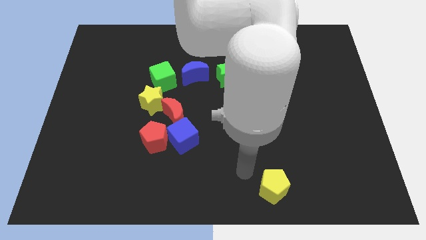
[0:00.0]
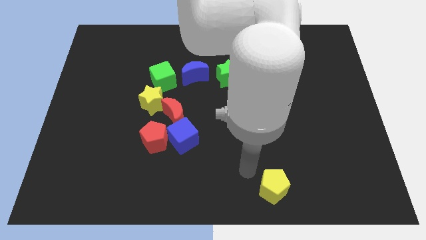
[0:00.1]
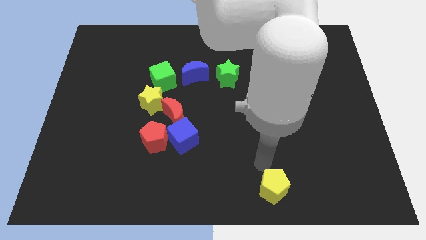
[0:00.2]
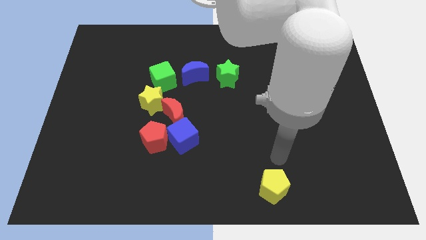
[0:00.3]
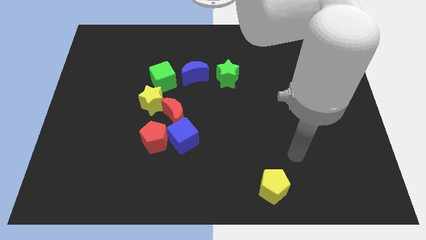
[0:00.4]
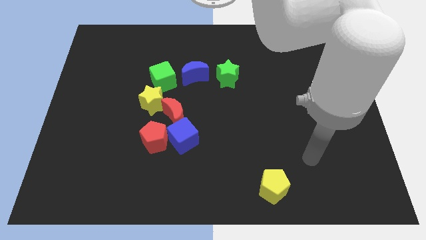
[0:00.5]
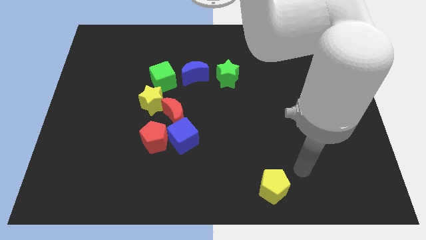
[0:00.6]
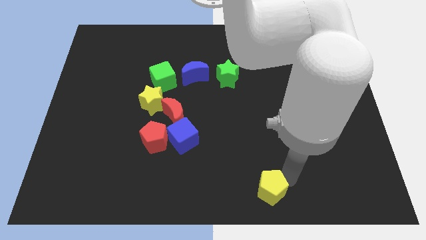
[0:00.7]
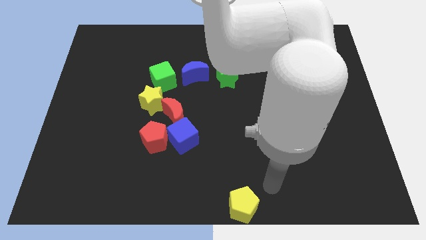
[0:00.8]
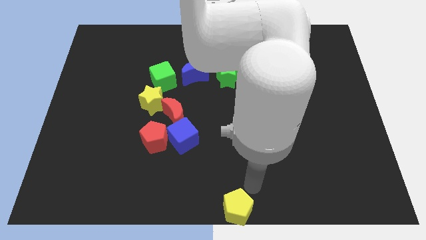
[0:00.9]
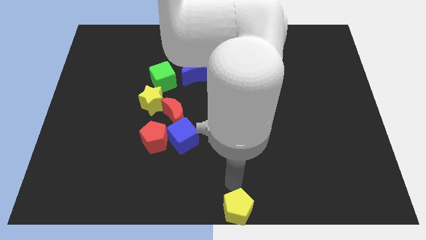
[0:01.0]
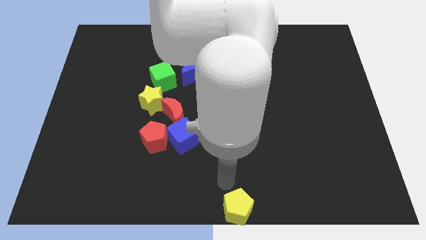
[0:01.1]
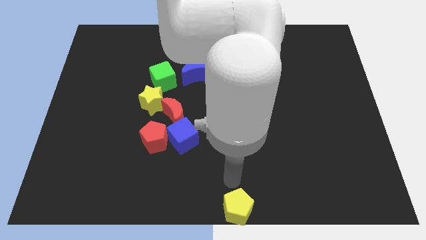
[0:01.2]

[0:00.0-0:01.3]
move the yellow pentagon to the bottom center of the board

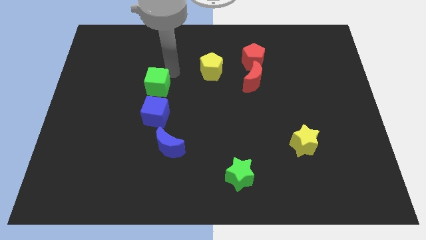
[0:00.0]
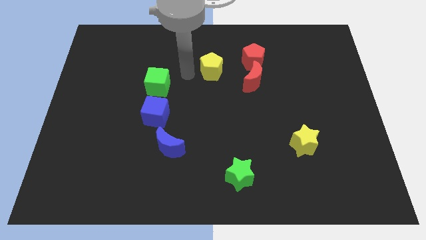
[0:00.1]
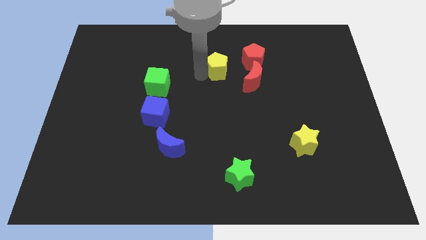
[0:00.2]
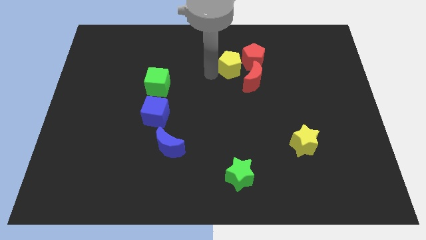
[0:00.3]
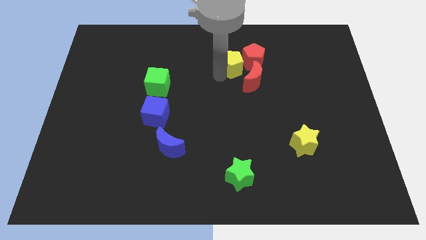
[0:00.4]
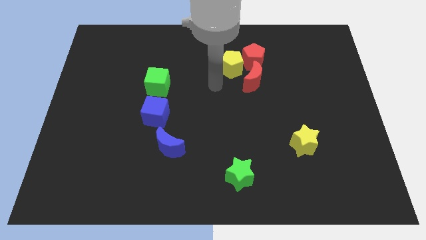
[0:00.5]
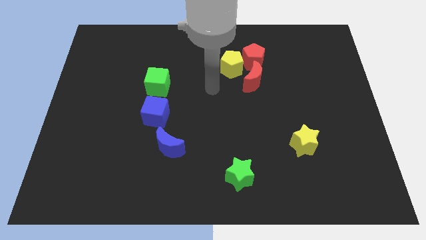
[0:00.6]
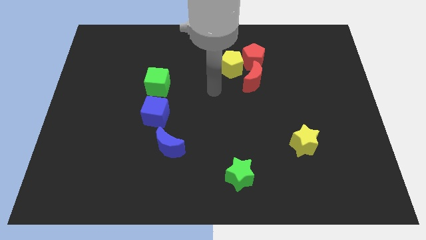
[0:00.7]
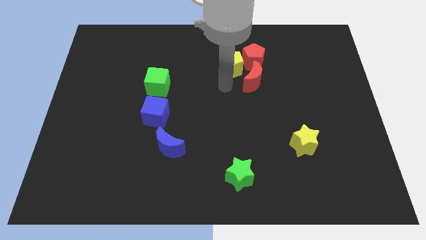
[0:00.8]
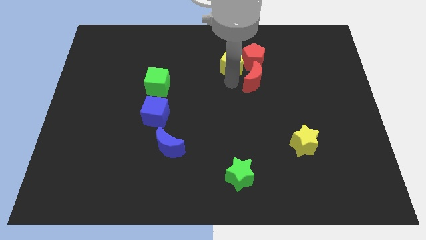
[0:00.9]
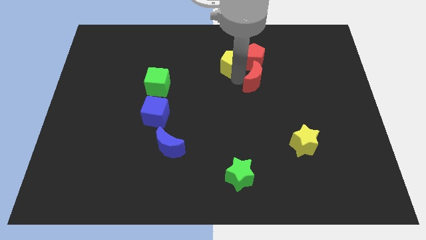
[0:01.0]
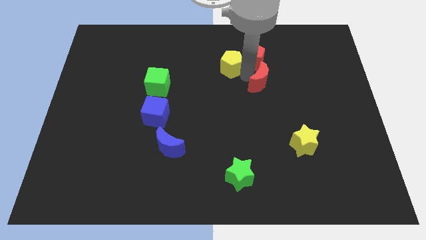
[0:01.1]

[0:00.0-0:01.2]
move the yellow pentagon close to the red pentagon

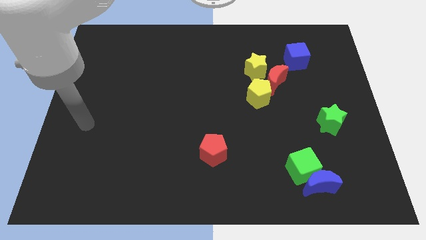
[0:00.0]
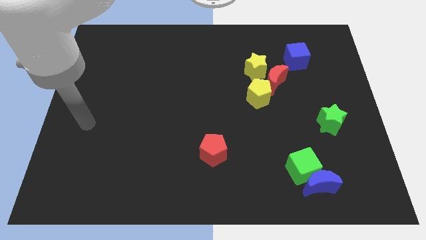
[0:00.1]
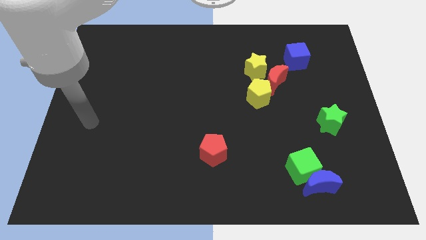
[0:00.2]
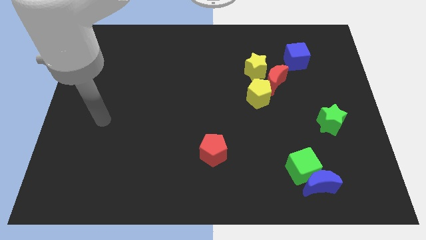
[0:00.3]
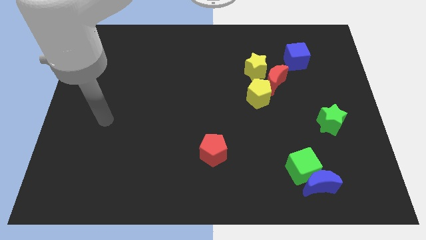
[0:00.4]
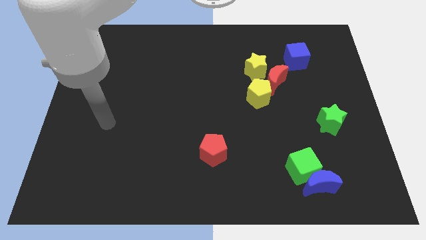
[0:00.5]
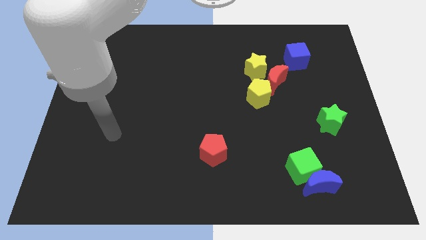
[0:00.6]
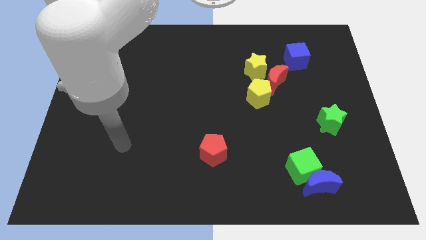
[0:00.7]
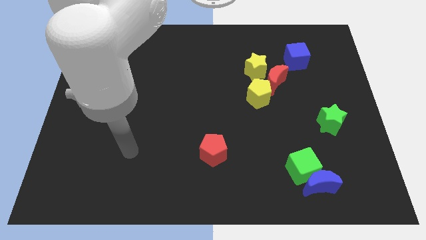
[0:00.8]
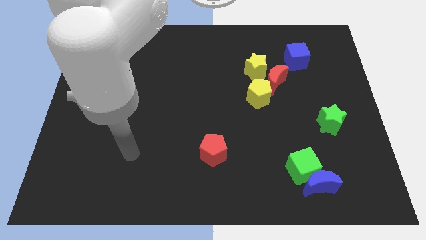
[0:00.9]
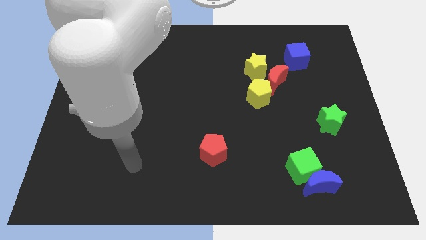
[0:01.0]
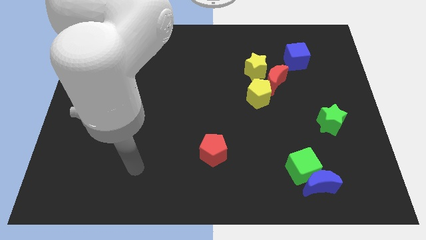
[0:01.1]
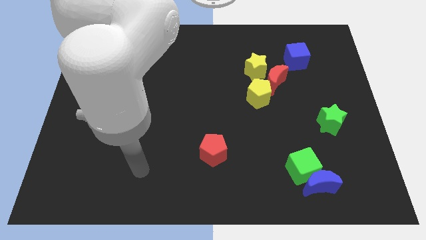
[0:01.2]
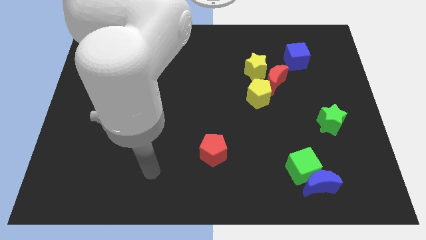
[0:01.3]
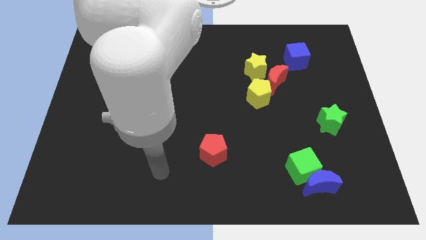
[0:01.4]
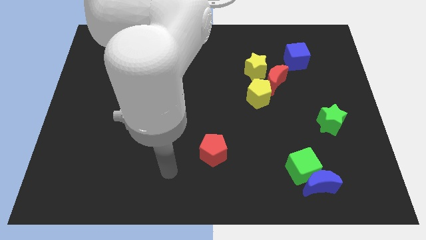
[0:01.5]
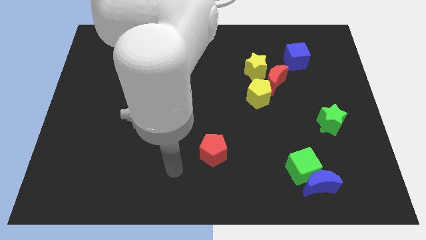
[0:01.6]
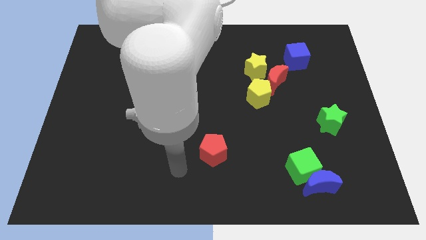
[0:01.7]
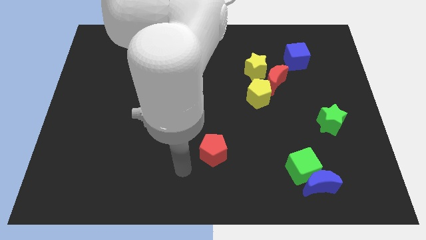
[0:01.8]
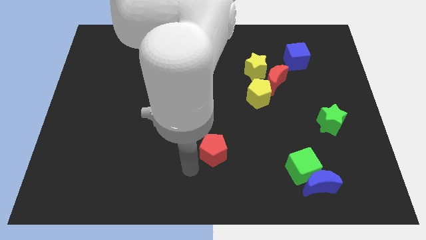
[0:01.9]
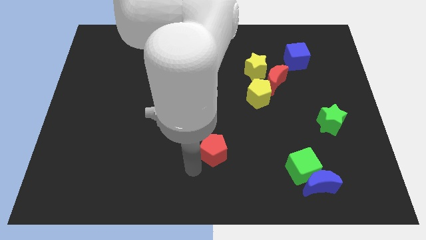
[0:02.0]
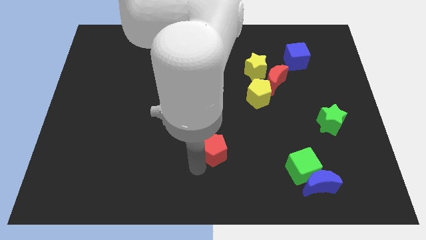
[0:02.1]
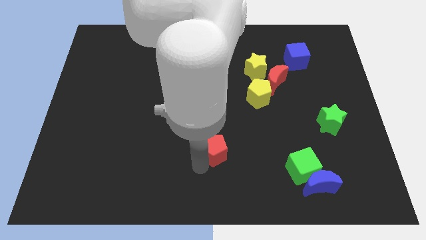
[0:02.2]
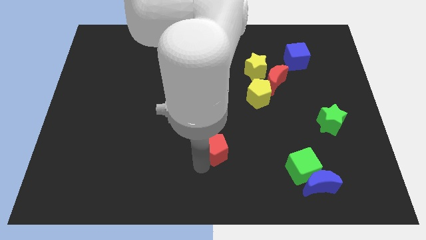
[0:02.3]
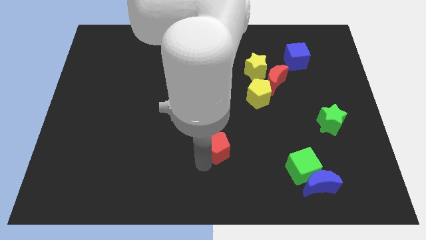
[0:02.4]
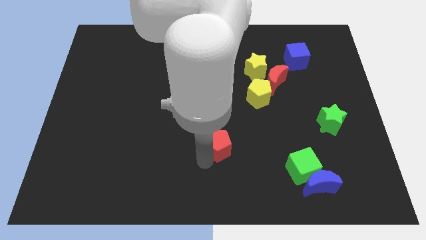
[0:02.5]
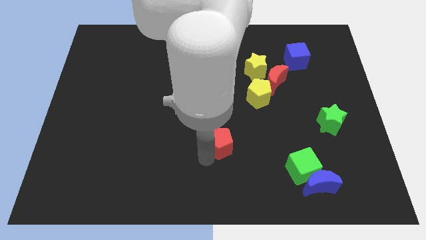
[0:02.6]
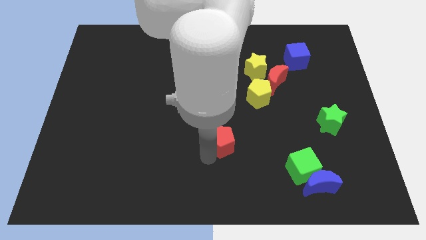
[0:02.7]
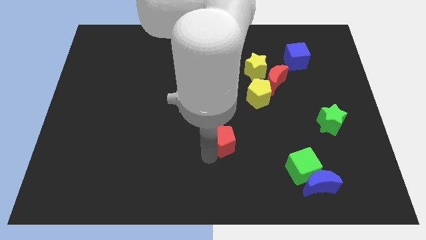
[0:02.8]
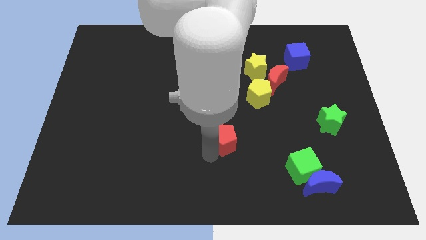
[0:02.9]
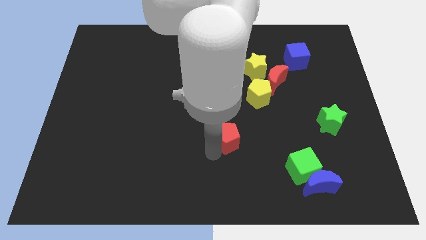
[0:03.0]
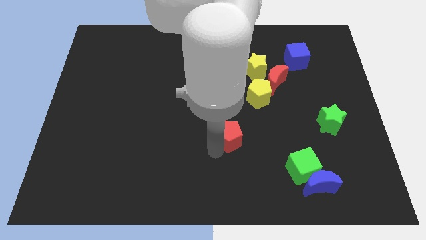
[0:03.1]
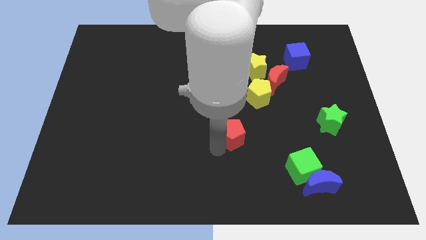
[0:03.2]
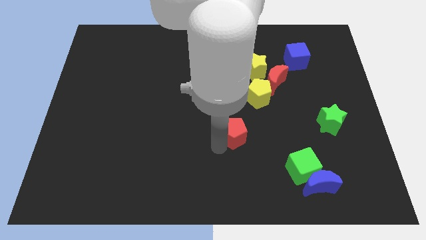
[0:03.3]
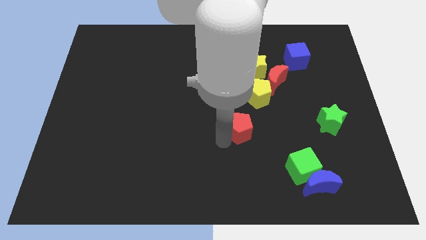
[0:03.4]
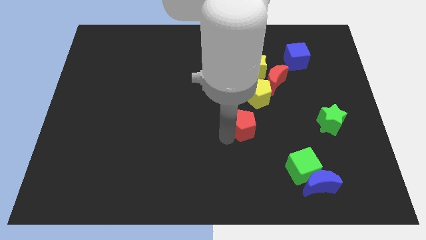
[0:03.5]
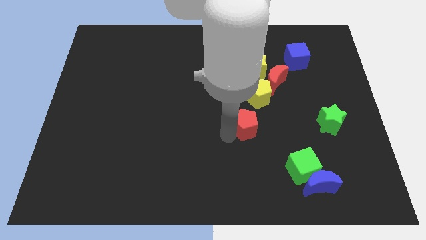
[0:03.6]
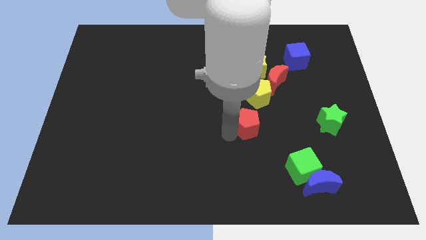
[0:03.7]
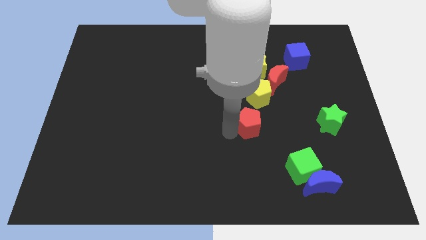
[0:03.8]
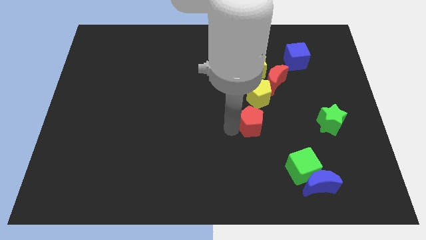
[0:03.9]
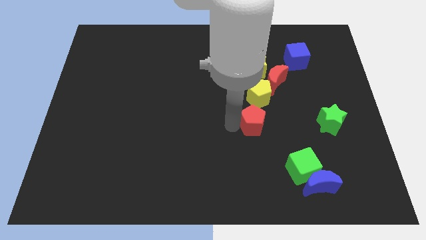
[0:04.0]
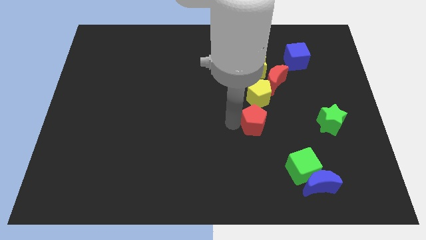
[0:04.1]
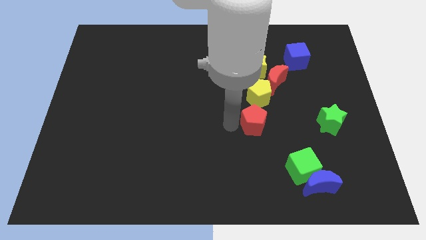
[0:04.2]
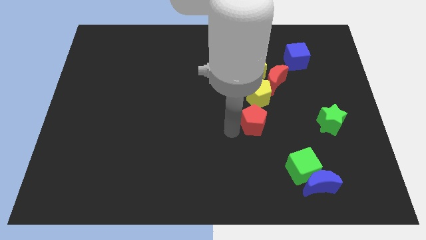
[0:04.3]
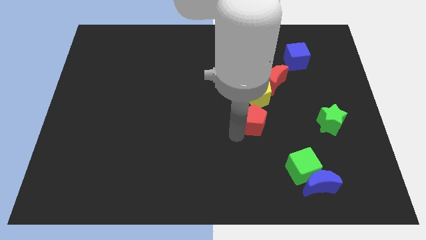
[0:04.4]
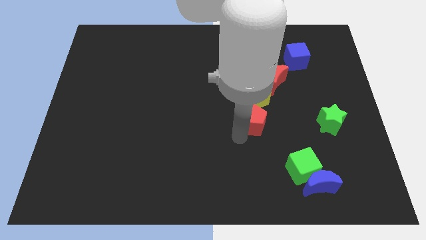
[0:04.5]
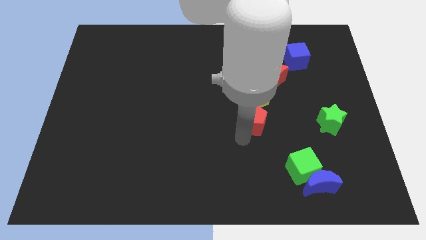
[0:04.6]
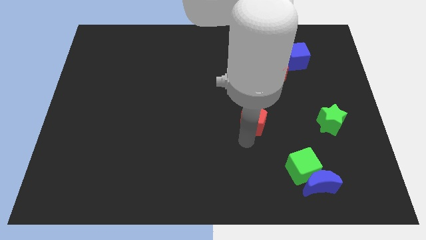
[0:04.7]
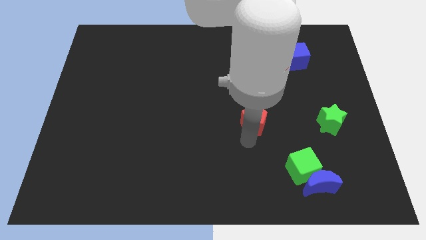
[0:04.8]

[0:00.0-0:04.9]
push the red pentagon to the bottom side of the yellow pentagon

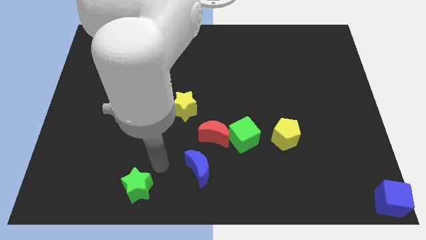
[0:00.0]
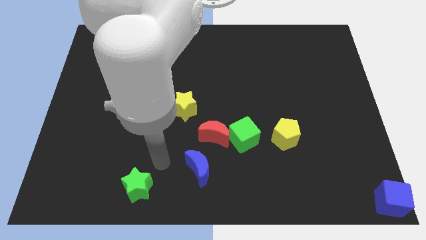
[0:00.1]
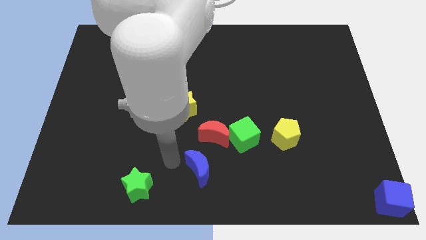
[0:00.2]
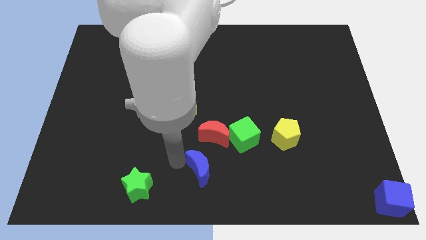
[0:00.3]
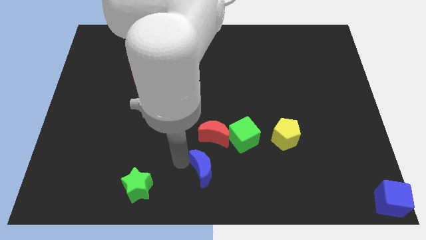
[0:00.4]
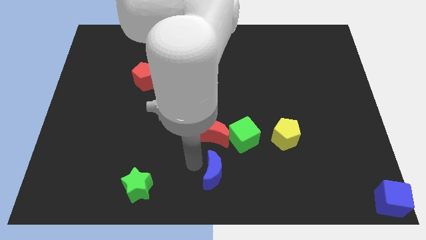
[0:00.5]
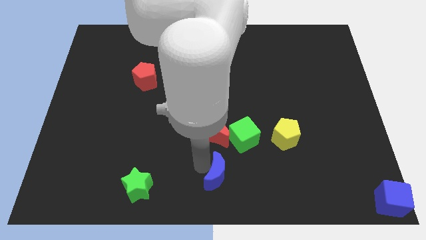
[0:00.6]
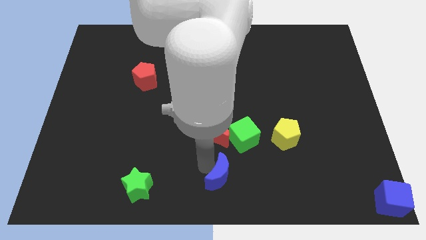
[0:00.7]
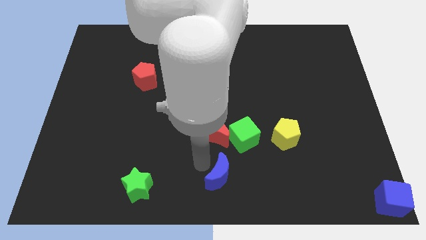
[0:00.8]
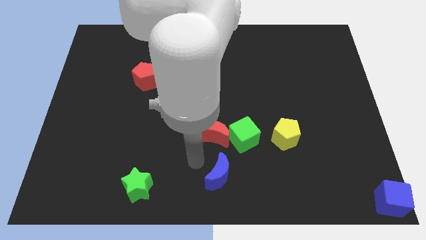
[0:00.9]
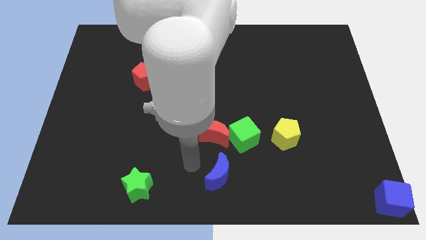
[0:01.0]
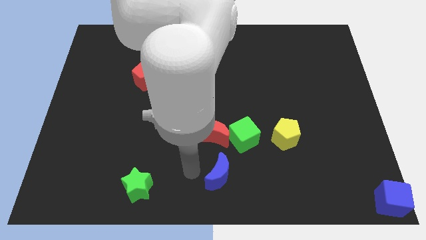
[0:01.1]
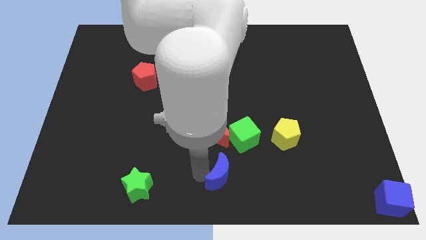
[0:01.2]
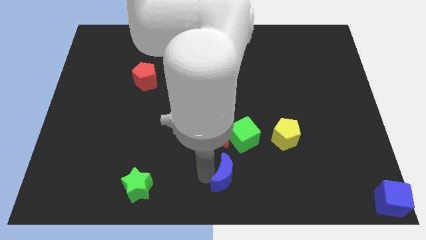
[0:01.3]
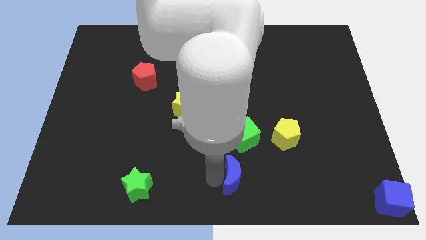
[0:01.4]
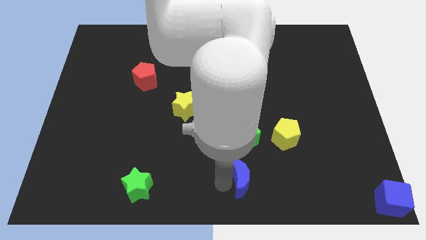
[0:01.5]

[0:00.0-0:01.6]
push the blue moon below the green cube
